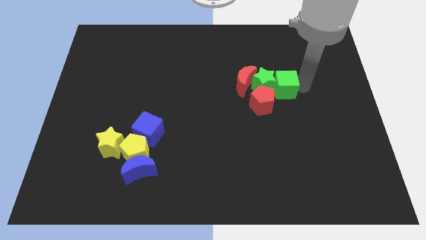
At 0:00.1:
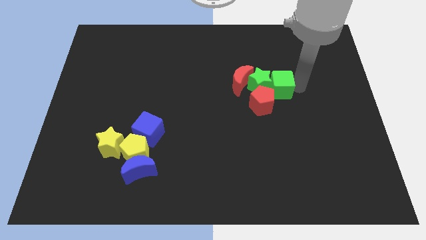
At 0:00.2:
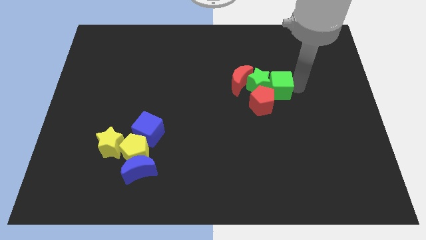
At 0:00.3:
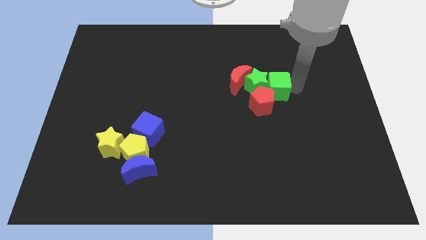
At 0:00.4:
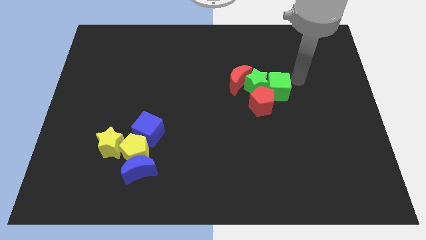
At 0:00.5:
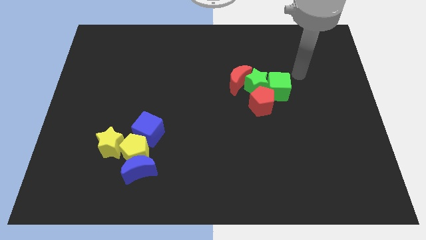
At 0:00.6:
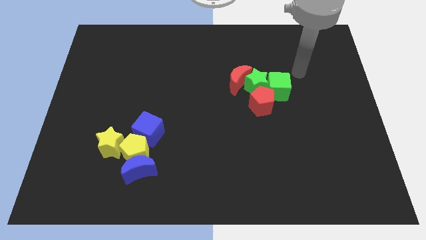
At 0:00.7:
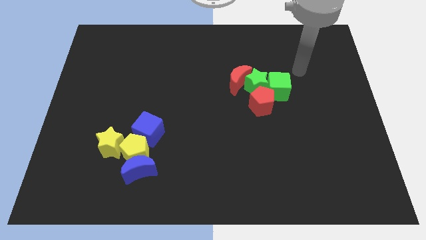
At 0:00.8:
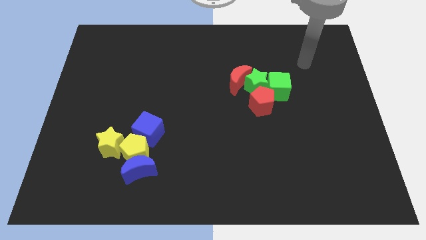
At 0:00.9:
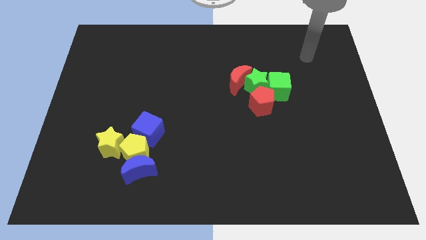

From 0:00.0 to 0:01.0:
push the green star with the help of green cube

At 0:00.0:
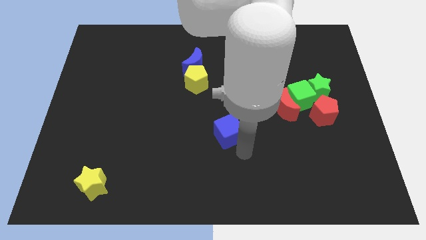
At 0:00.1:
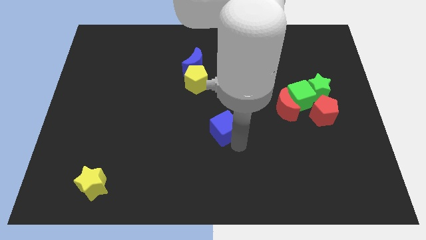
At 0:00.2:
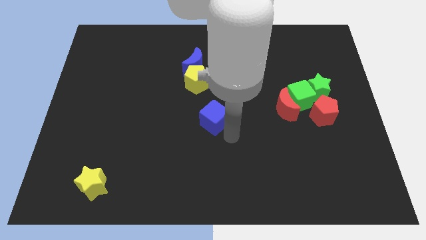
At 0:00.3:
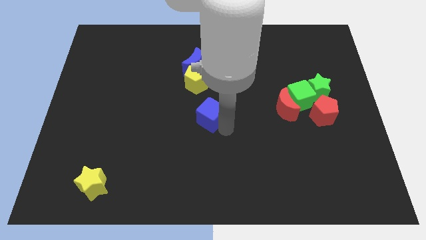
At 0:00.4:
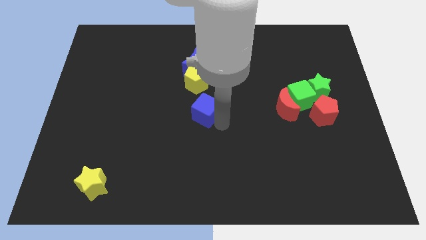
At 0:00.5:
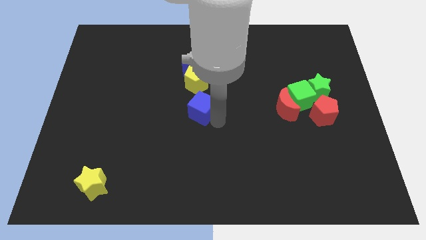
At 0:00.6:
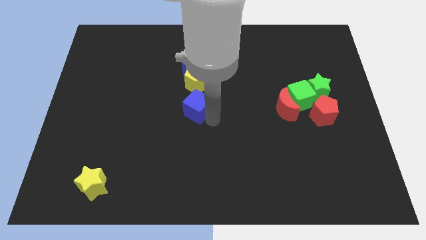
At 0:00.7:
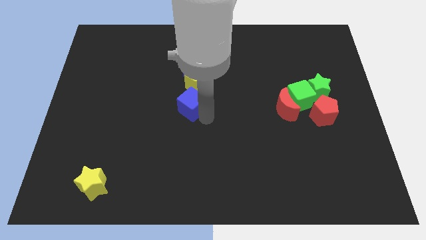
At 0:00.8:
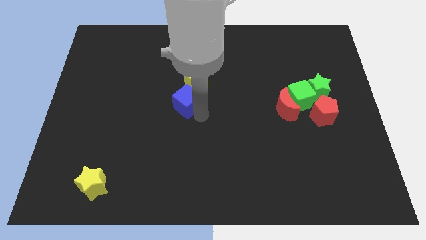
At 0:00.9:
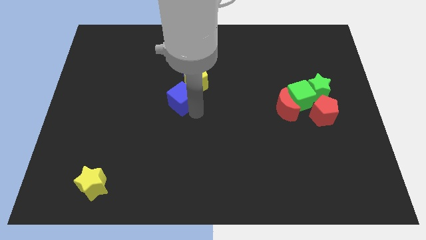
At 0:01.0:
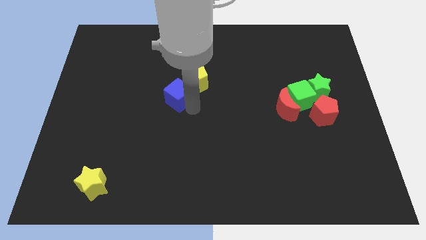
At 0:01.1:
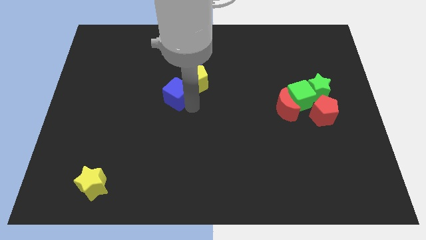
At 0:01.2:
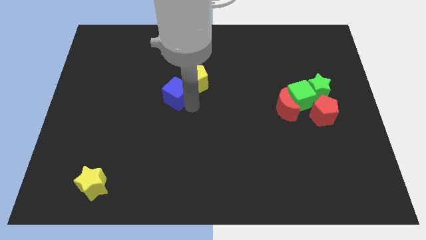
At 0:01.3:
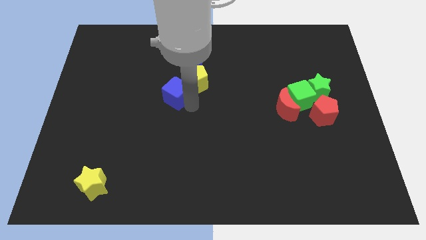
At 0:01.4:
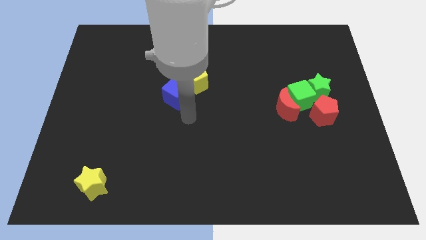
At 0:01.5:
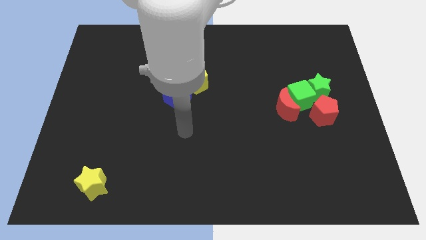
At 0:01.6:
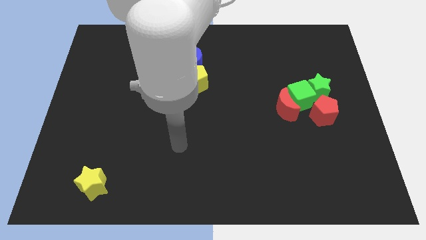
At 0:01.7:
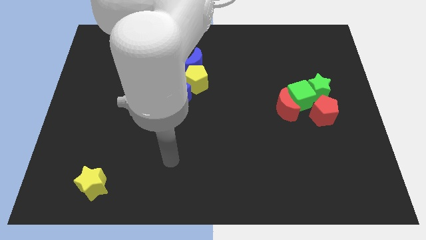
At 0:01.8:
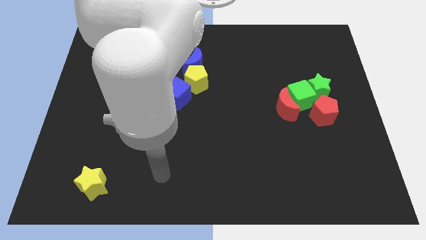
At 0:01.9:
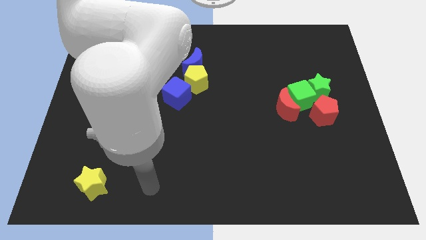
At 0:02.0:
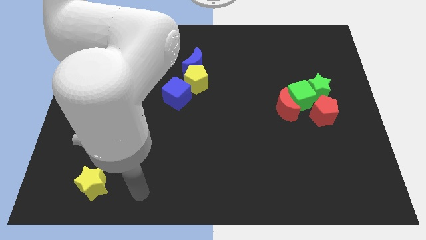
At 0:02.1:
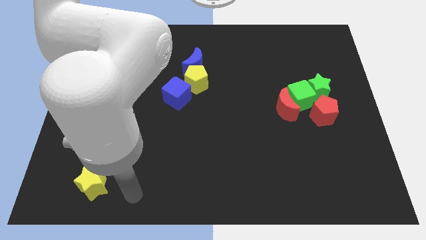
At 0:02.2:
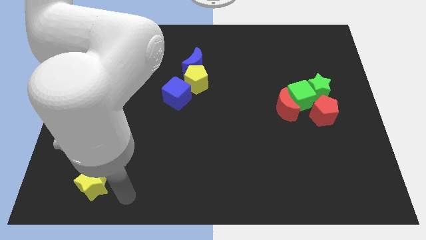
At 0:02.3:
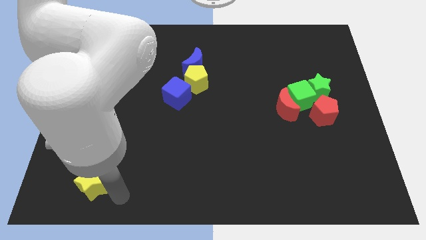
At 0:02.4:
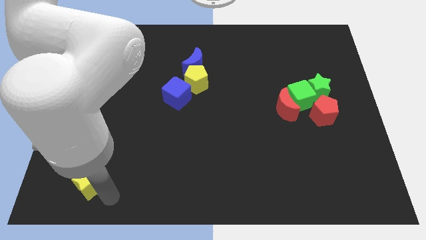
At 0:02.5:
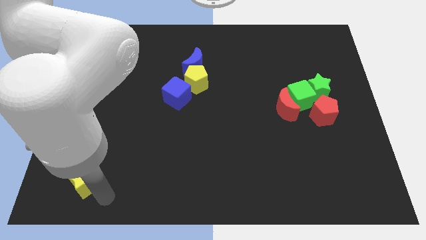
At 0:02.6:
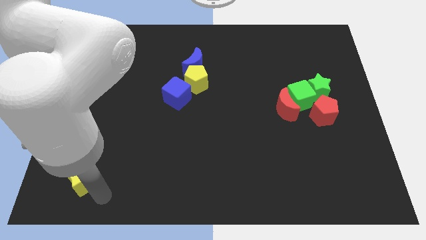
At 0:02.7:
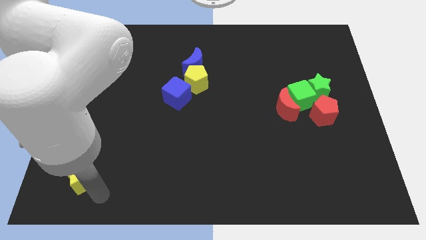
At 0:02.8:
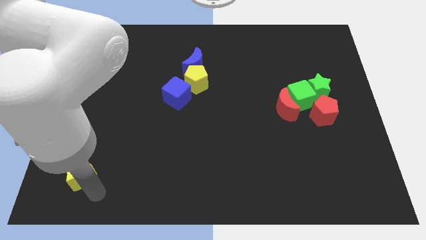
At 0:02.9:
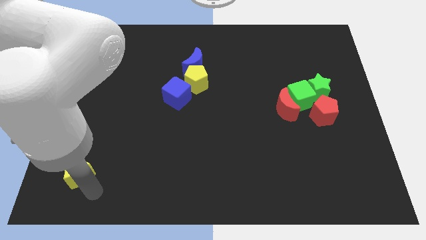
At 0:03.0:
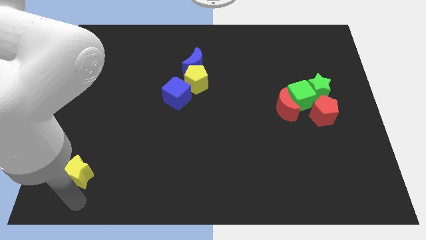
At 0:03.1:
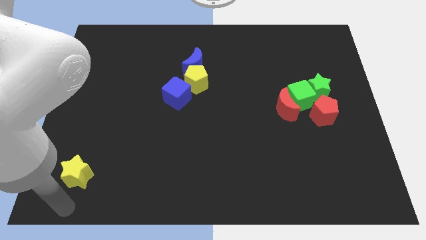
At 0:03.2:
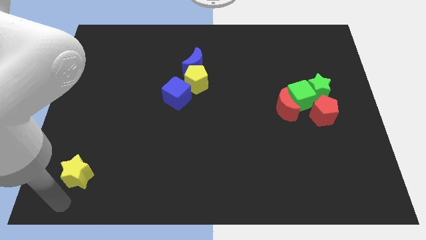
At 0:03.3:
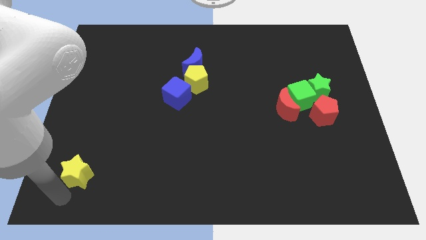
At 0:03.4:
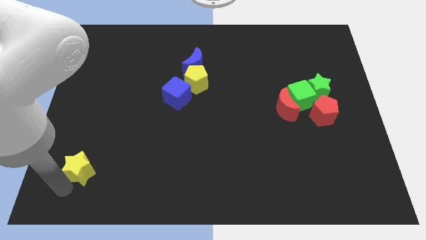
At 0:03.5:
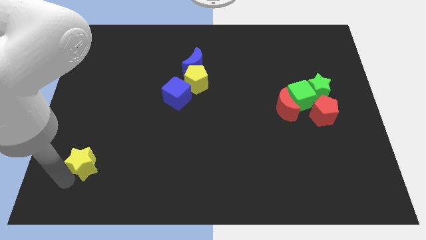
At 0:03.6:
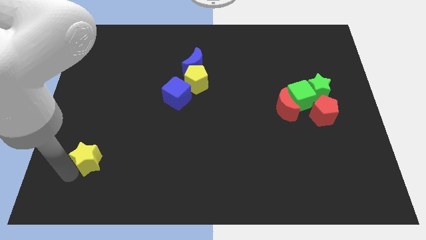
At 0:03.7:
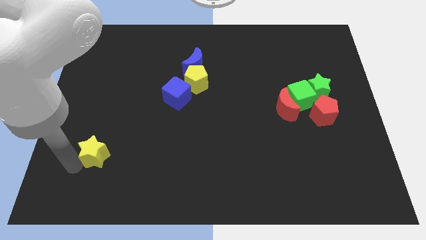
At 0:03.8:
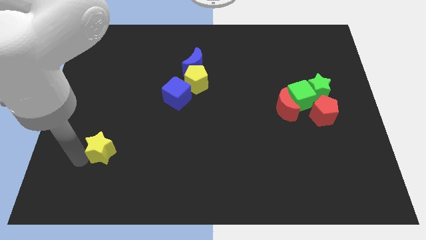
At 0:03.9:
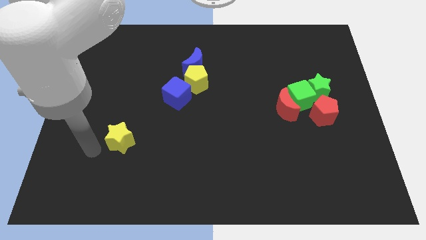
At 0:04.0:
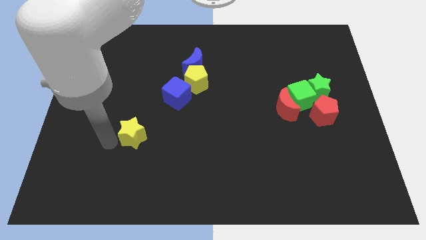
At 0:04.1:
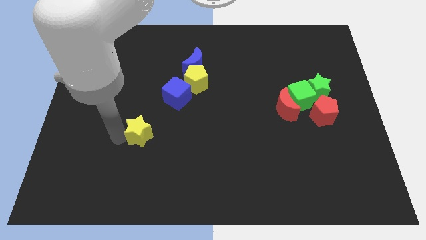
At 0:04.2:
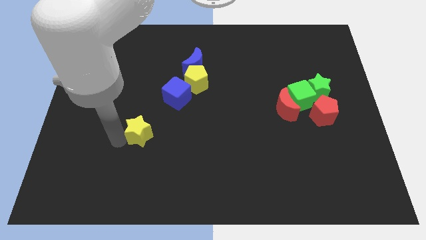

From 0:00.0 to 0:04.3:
place the yellow star diagonally to the bottom left to the blue cube

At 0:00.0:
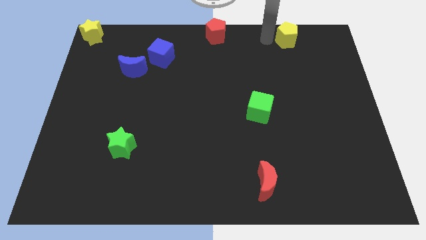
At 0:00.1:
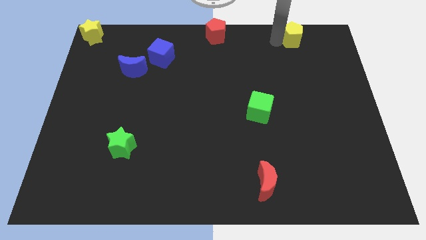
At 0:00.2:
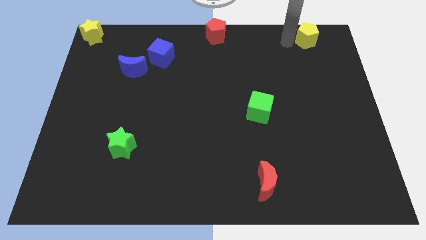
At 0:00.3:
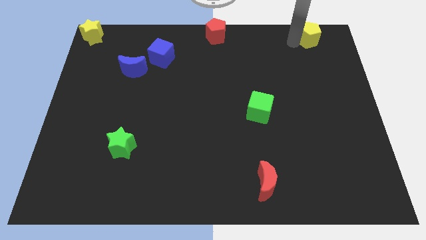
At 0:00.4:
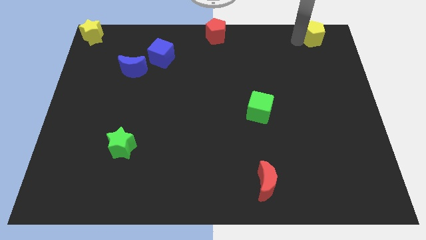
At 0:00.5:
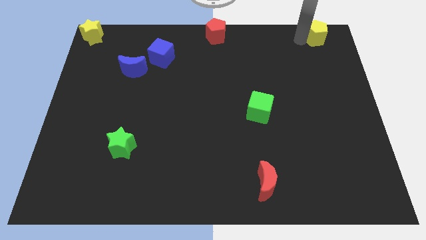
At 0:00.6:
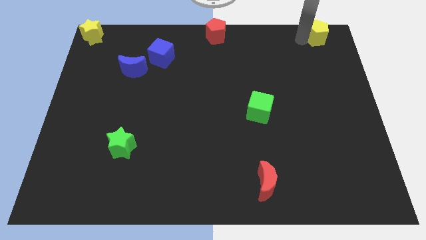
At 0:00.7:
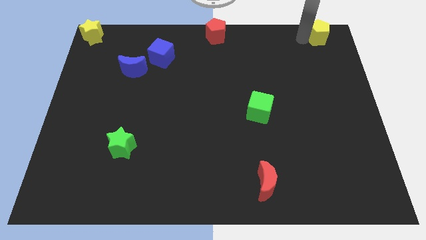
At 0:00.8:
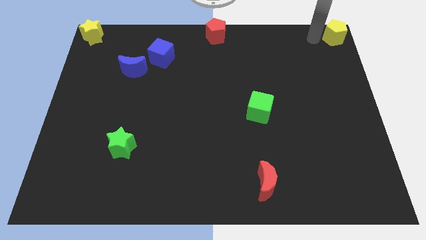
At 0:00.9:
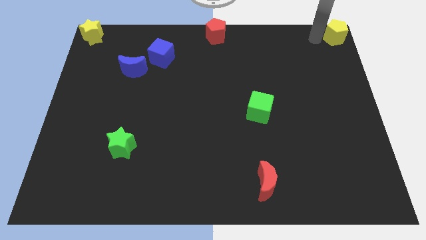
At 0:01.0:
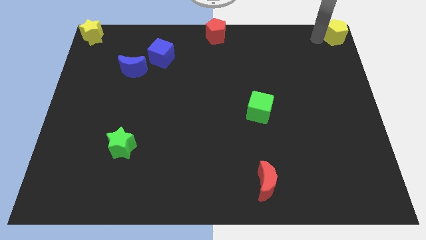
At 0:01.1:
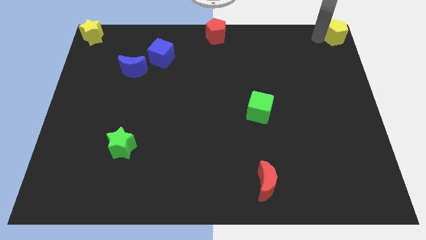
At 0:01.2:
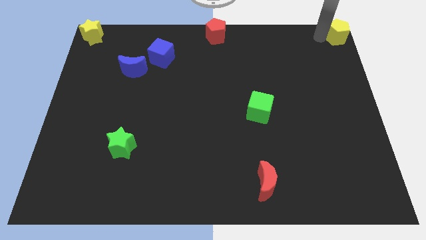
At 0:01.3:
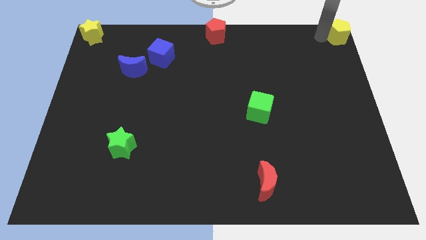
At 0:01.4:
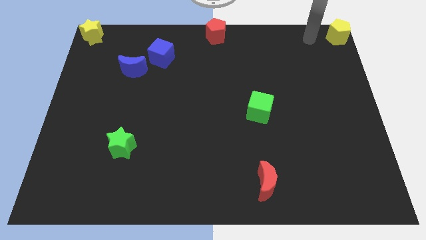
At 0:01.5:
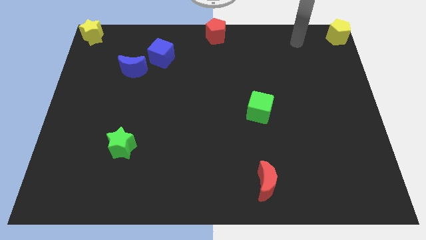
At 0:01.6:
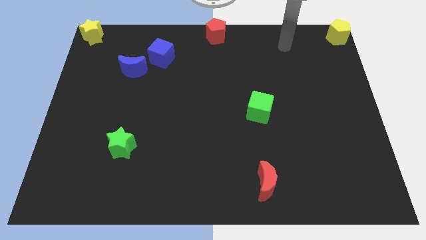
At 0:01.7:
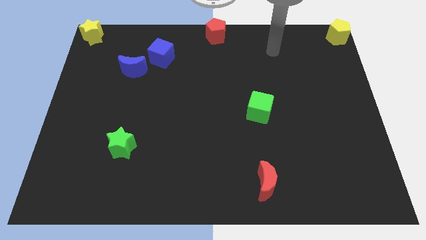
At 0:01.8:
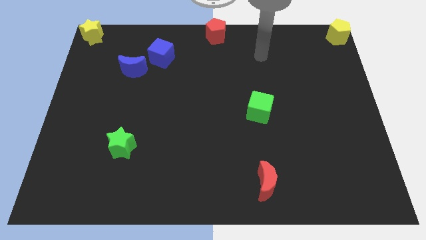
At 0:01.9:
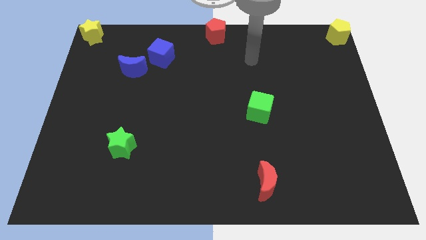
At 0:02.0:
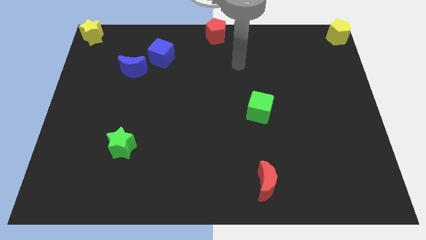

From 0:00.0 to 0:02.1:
push the yellow pentagon to the top right corner of the board

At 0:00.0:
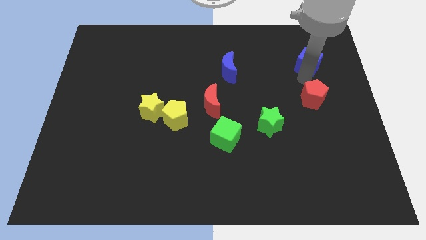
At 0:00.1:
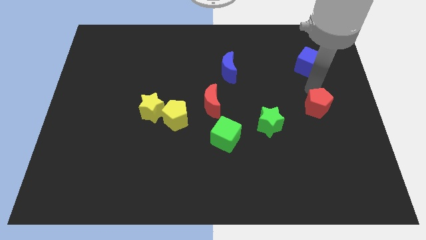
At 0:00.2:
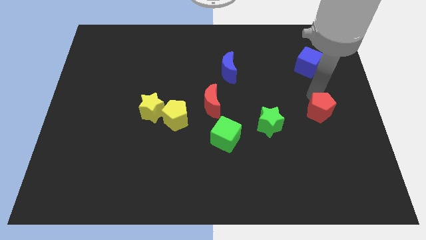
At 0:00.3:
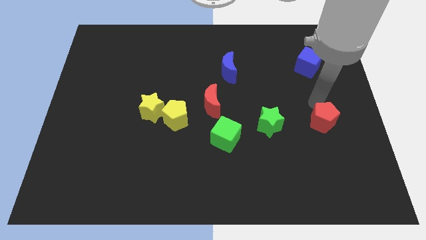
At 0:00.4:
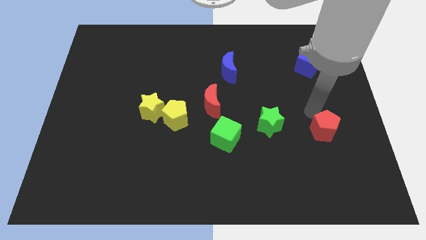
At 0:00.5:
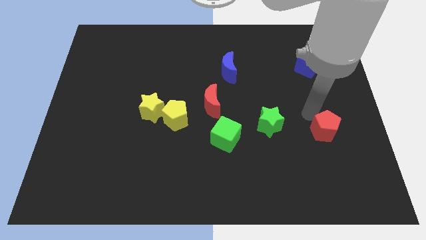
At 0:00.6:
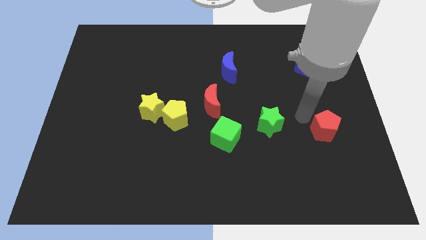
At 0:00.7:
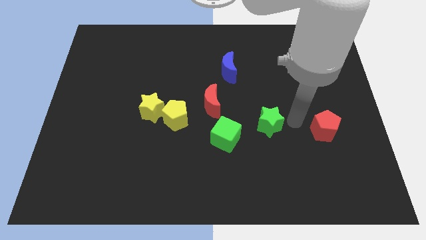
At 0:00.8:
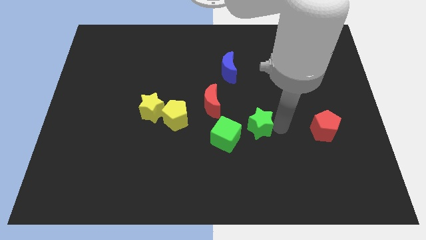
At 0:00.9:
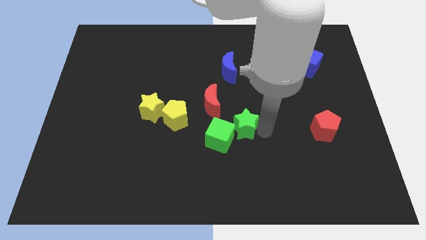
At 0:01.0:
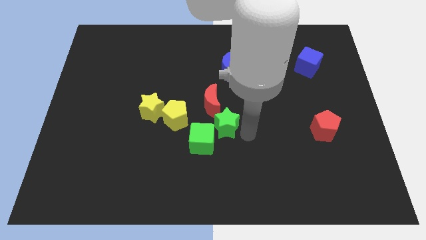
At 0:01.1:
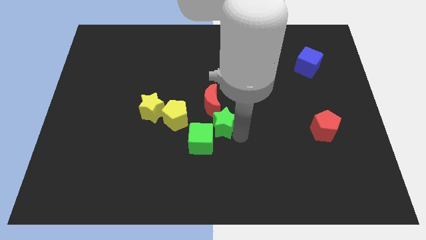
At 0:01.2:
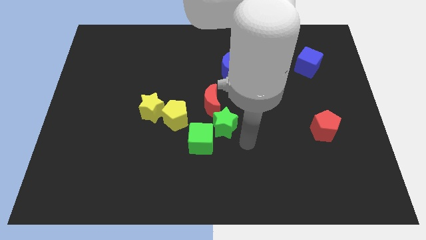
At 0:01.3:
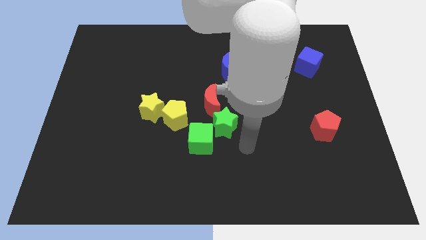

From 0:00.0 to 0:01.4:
push the green star at the bottom right to the red moon
